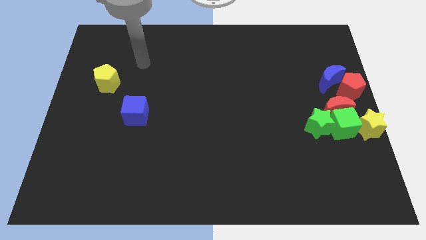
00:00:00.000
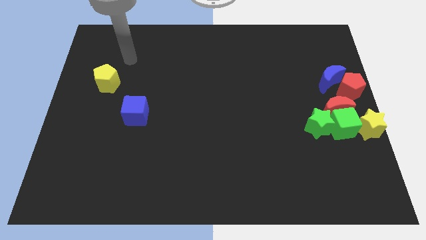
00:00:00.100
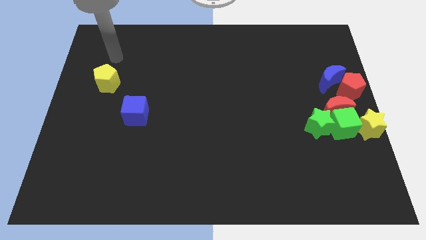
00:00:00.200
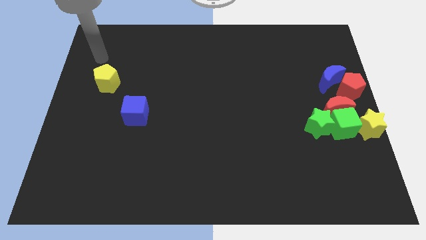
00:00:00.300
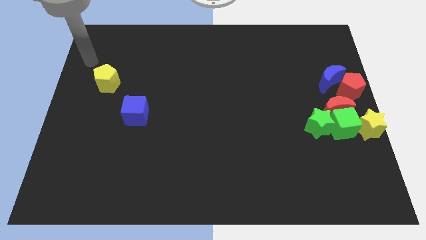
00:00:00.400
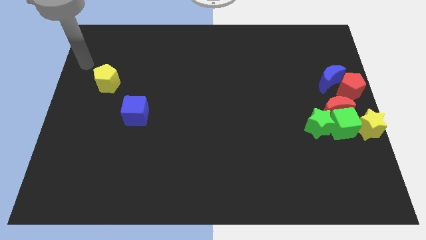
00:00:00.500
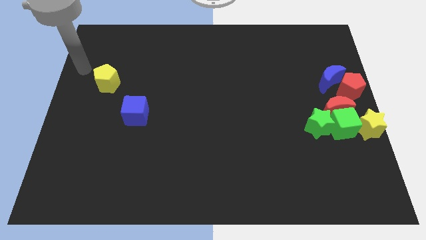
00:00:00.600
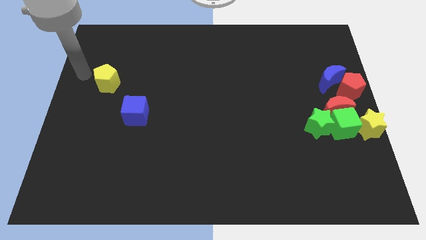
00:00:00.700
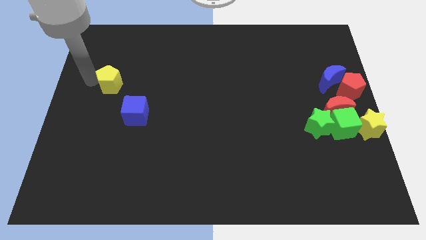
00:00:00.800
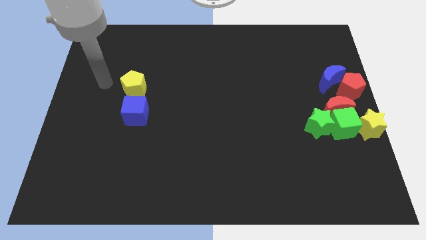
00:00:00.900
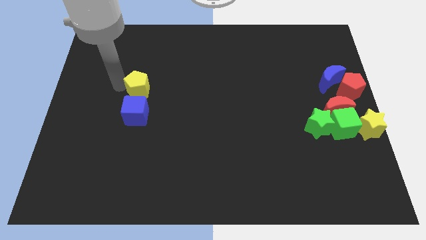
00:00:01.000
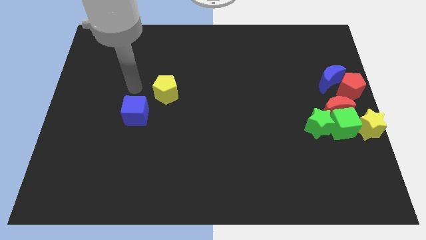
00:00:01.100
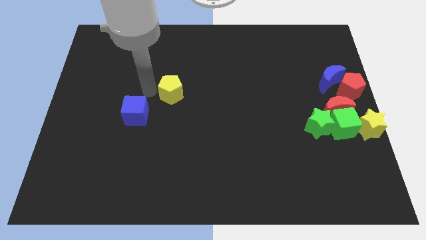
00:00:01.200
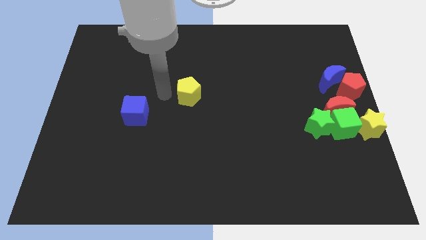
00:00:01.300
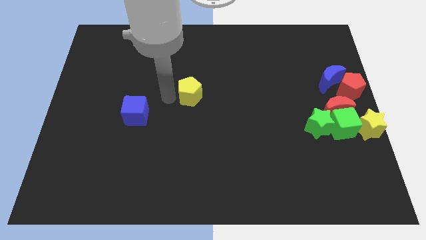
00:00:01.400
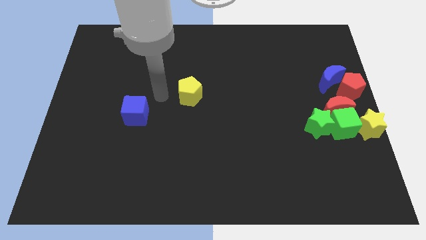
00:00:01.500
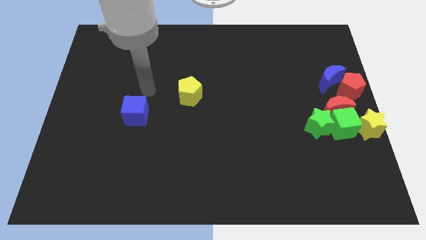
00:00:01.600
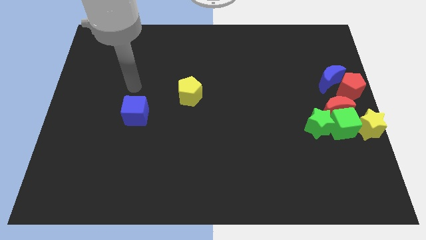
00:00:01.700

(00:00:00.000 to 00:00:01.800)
move the yellow pentagon towards the center of board

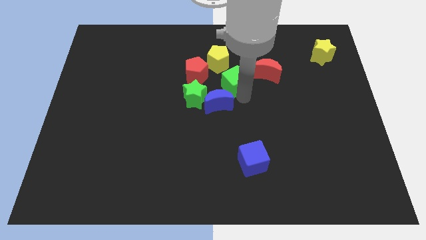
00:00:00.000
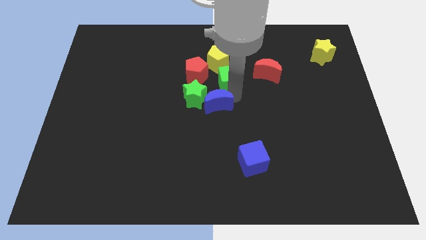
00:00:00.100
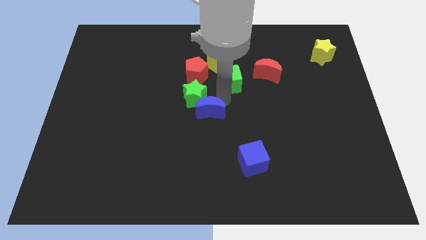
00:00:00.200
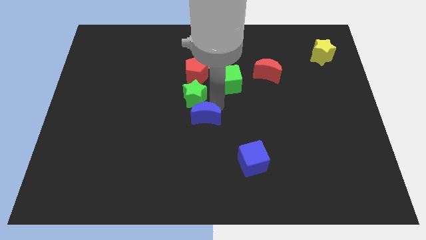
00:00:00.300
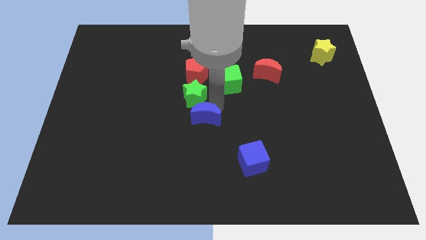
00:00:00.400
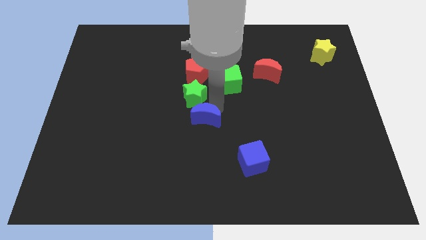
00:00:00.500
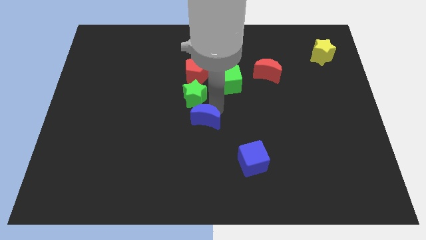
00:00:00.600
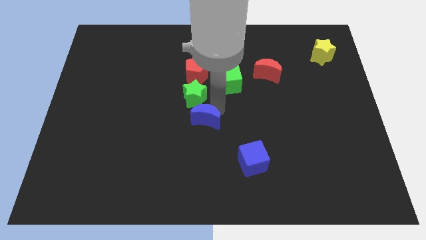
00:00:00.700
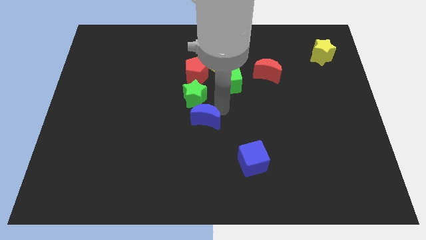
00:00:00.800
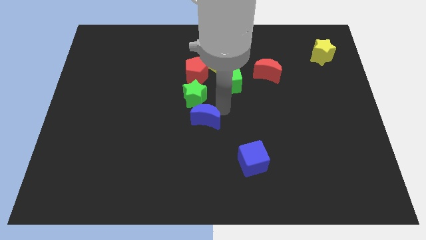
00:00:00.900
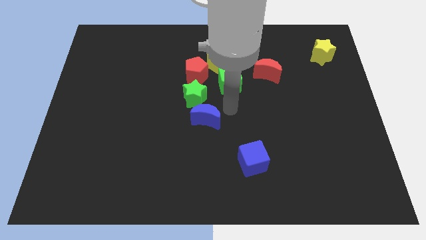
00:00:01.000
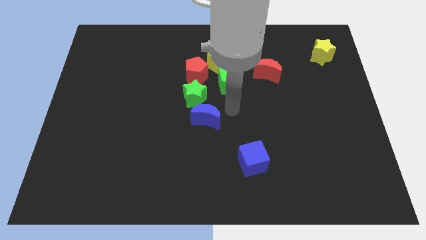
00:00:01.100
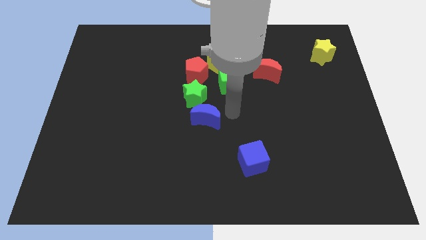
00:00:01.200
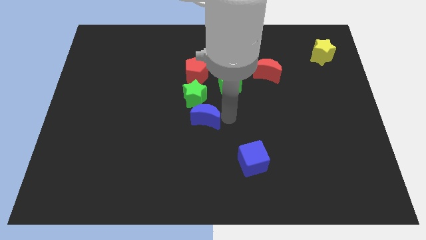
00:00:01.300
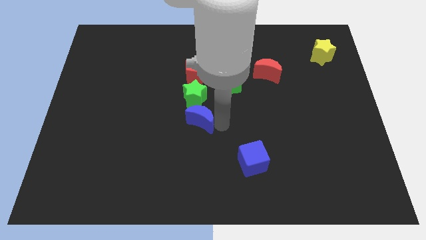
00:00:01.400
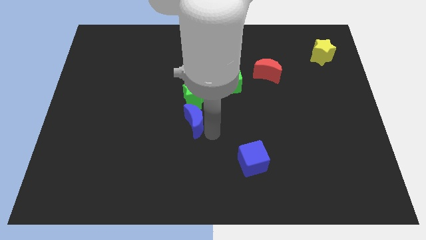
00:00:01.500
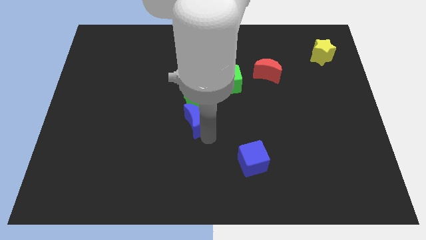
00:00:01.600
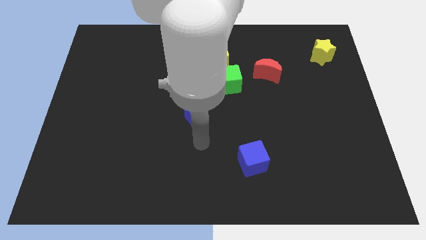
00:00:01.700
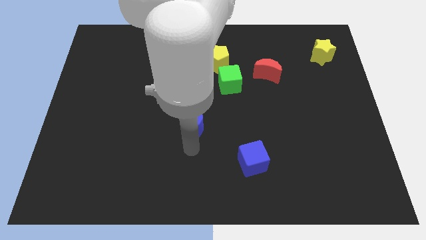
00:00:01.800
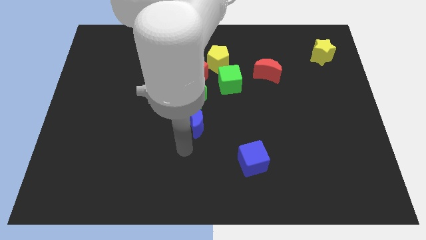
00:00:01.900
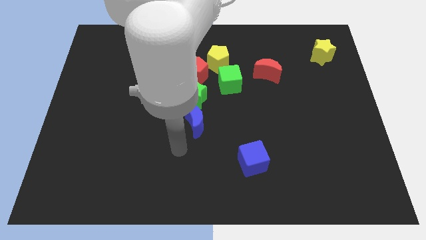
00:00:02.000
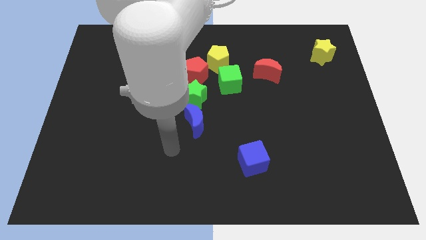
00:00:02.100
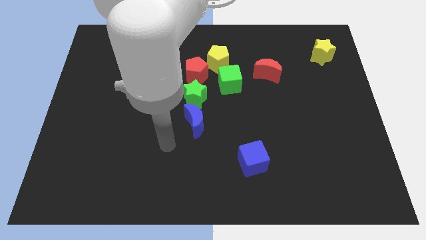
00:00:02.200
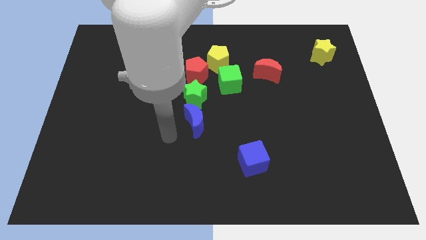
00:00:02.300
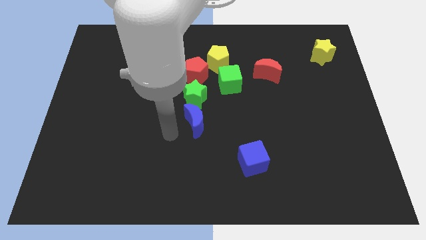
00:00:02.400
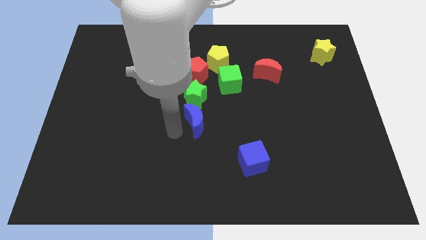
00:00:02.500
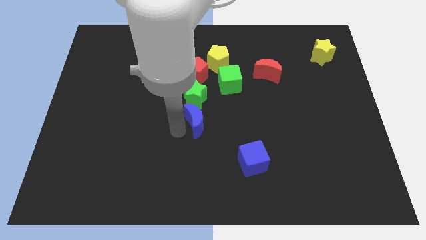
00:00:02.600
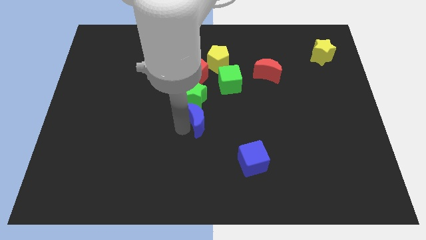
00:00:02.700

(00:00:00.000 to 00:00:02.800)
place the blue crescent below the green star

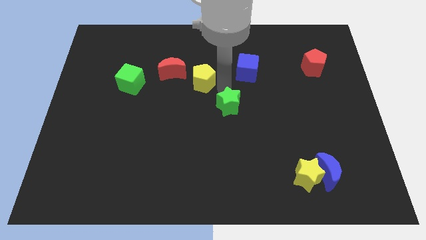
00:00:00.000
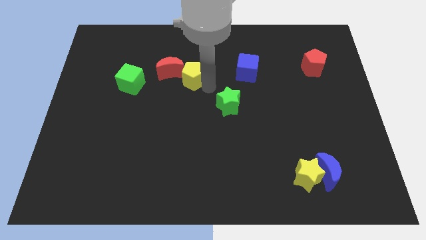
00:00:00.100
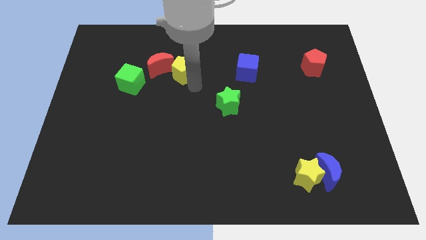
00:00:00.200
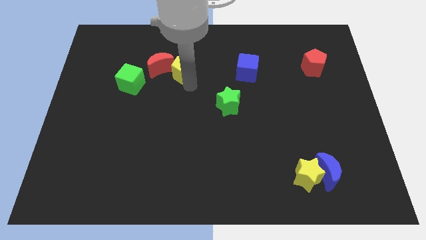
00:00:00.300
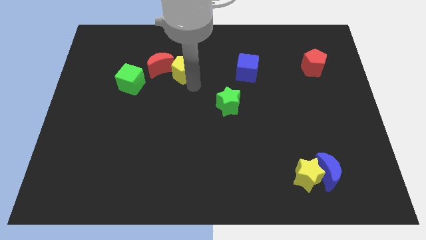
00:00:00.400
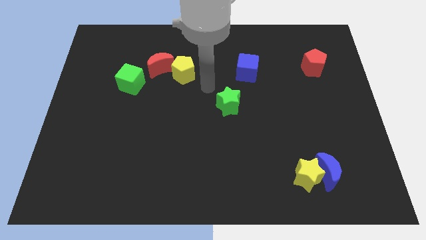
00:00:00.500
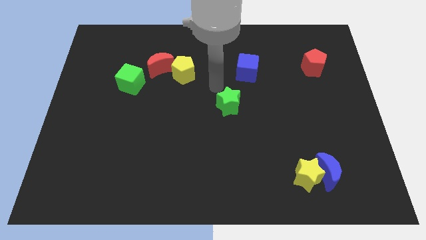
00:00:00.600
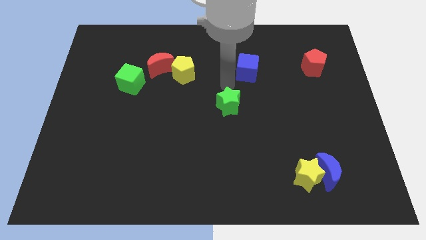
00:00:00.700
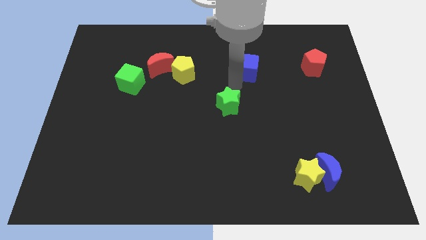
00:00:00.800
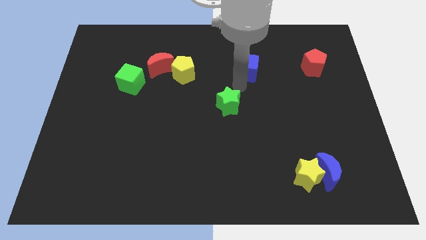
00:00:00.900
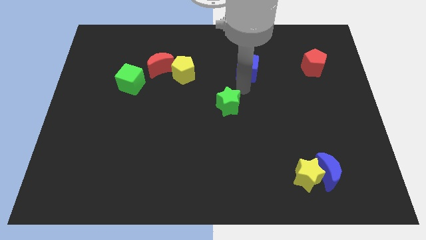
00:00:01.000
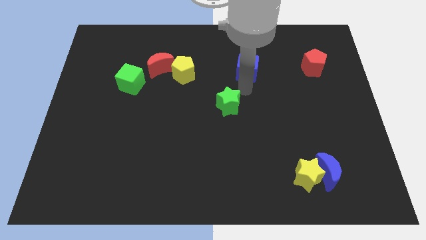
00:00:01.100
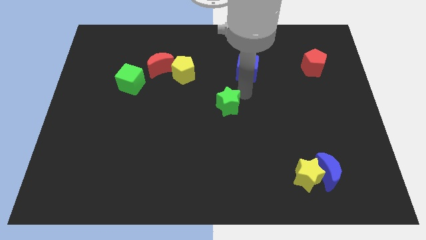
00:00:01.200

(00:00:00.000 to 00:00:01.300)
push yellow pentagon into the red moon

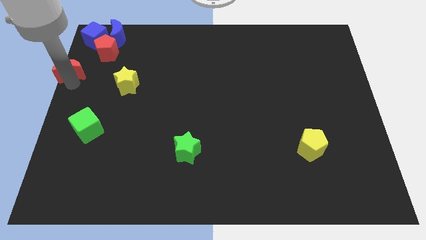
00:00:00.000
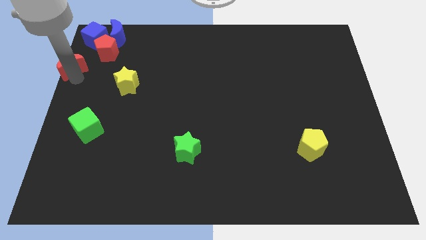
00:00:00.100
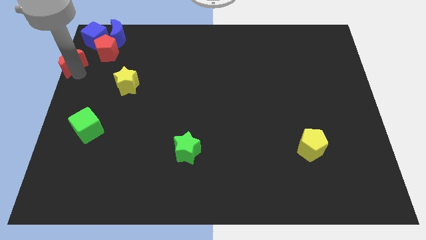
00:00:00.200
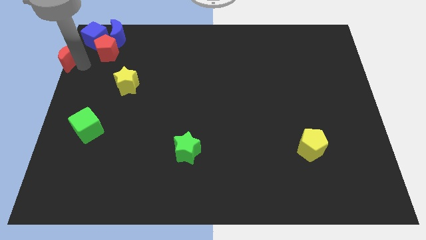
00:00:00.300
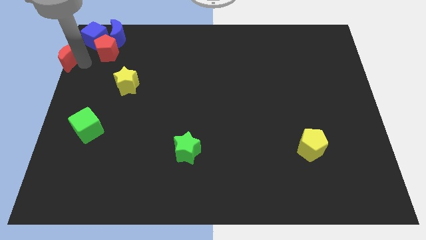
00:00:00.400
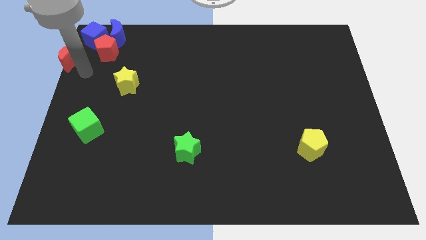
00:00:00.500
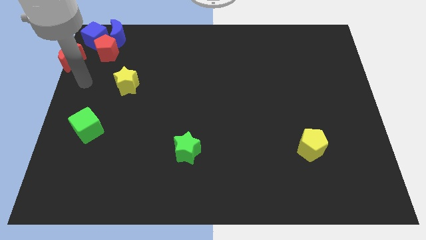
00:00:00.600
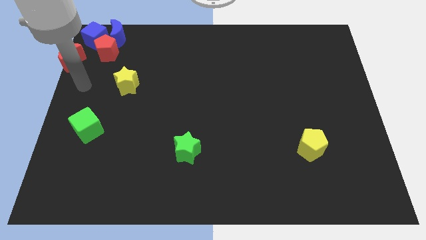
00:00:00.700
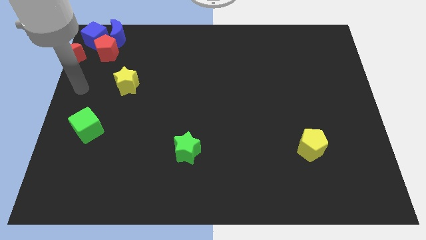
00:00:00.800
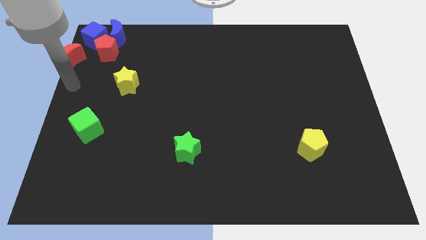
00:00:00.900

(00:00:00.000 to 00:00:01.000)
move the red crescent to the left of the blue cube

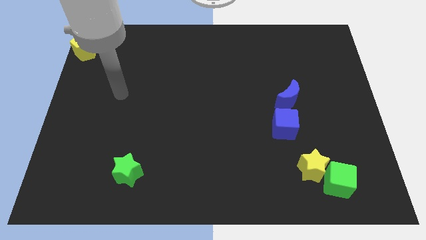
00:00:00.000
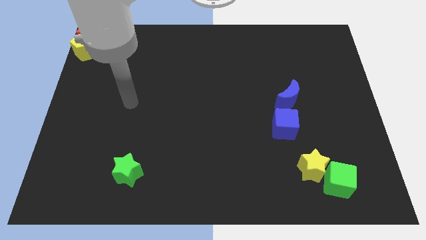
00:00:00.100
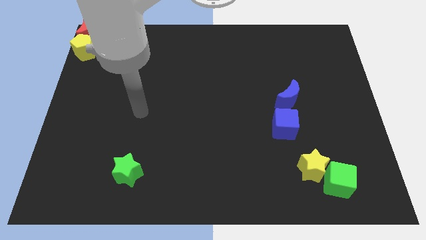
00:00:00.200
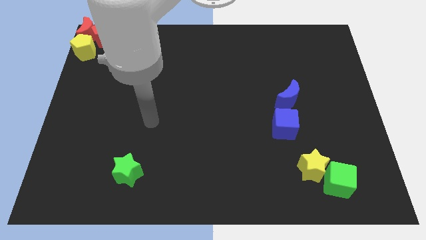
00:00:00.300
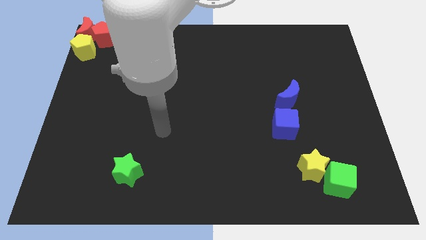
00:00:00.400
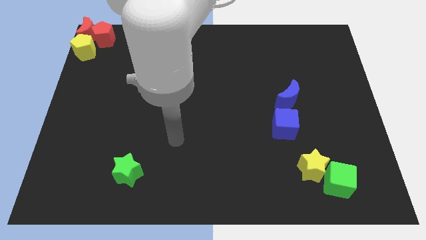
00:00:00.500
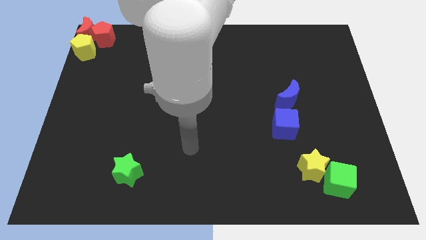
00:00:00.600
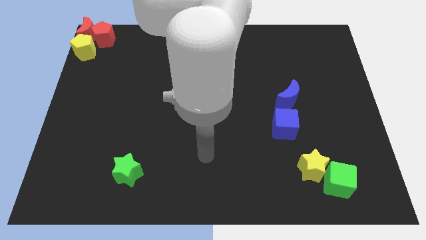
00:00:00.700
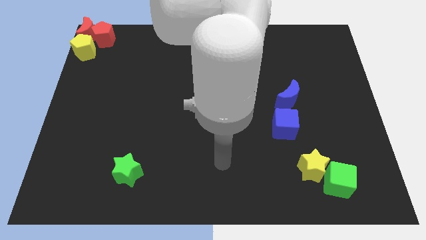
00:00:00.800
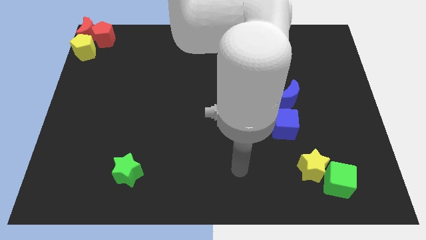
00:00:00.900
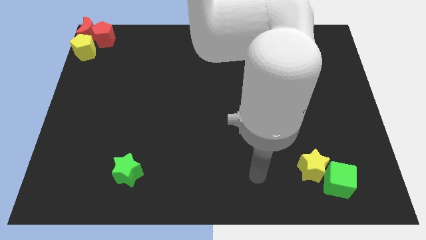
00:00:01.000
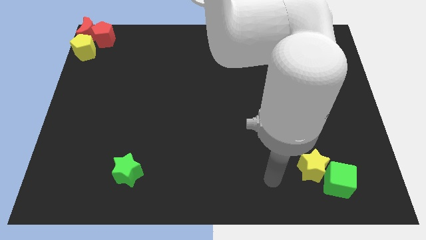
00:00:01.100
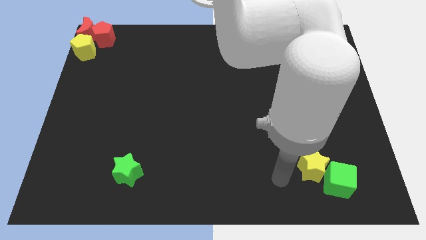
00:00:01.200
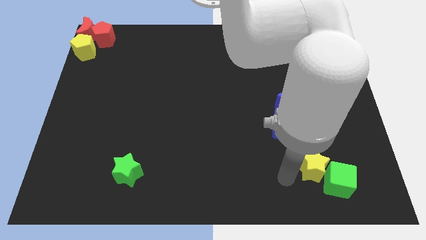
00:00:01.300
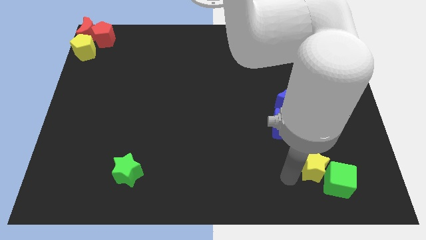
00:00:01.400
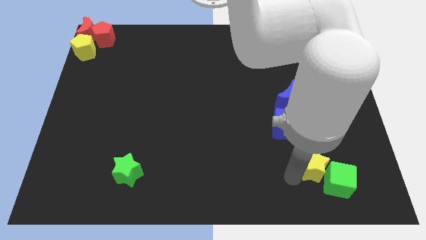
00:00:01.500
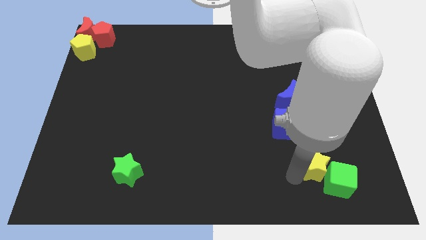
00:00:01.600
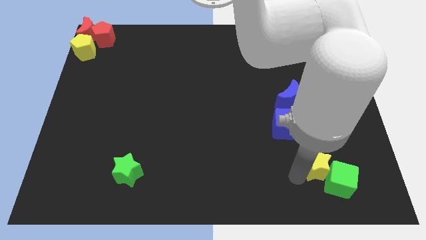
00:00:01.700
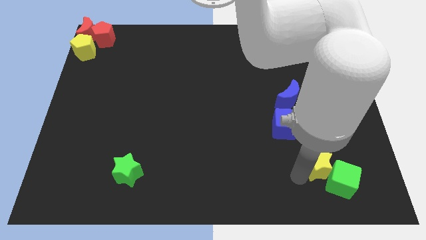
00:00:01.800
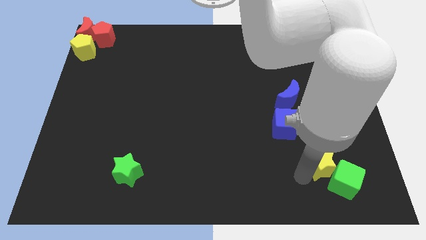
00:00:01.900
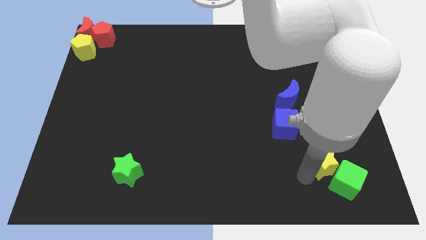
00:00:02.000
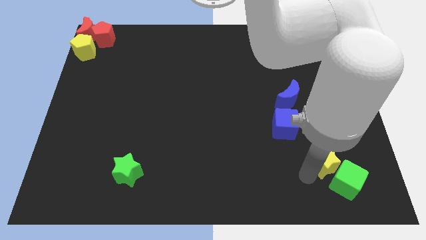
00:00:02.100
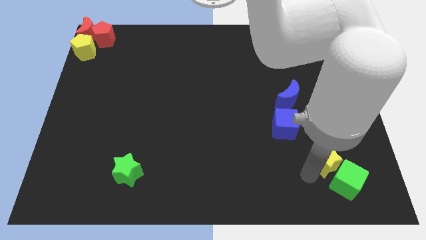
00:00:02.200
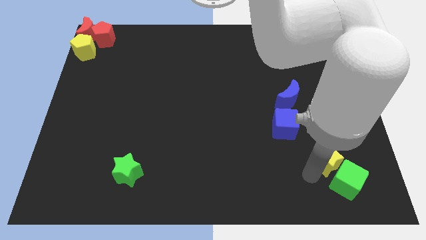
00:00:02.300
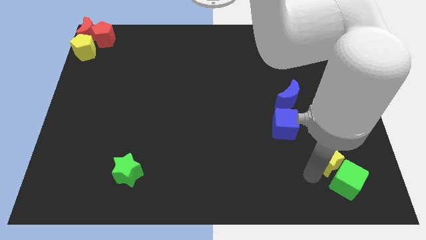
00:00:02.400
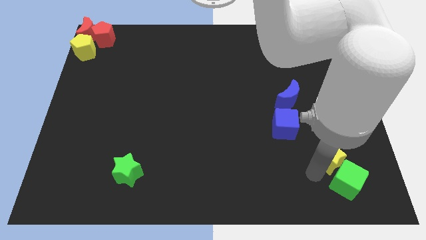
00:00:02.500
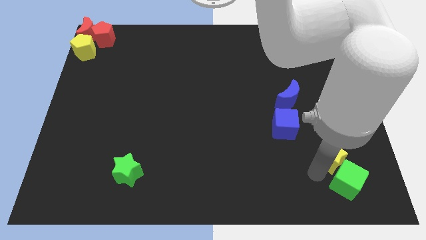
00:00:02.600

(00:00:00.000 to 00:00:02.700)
move your arm to the yellow star
